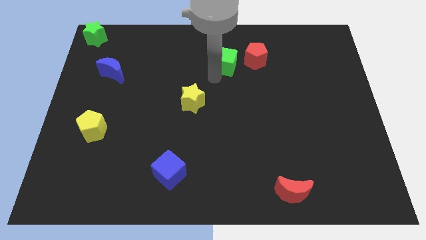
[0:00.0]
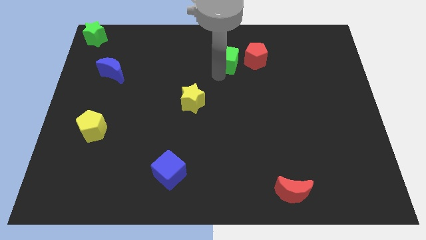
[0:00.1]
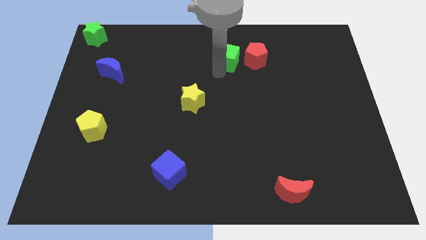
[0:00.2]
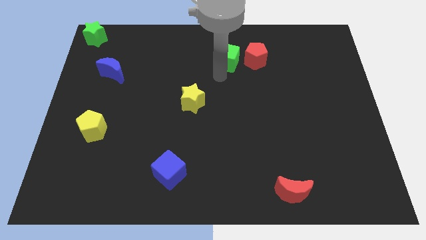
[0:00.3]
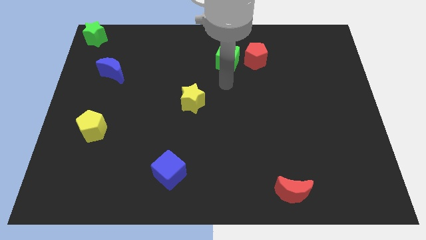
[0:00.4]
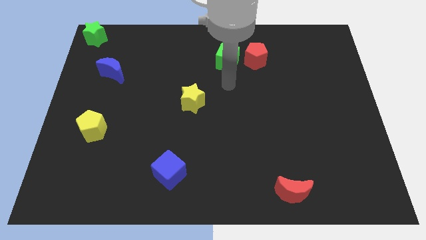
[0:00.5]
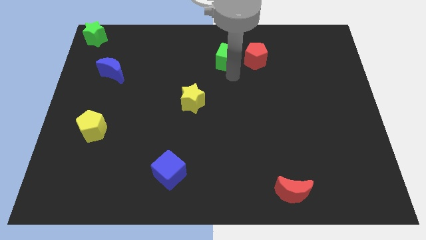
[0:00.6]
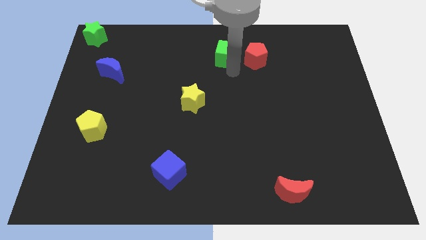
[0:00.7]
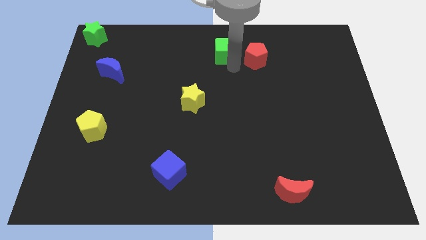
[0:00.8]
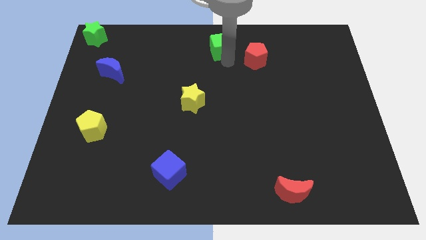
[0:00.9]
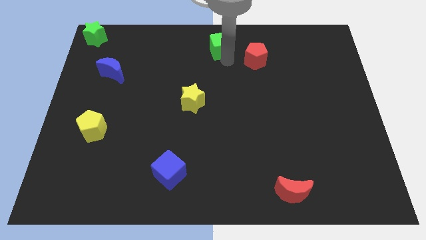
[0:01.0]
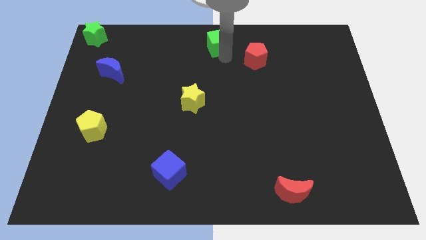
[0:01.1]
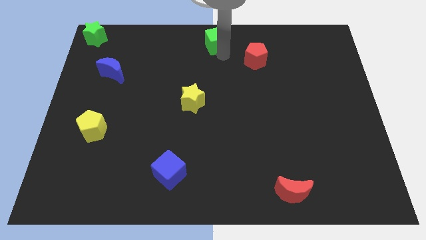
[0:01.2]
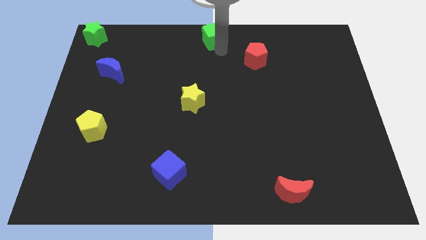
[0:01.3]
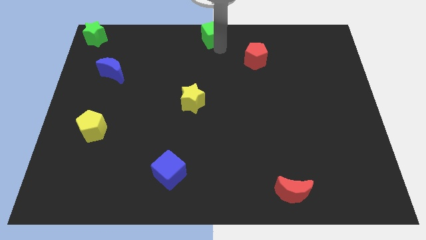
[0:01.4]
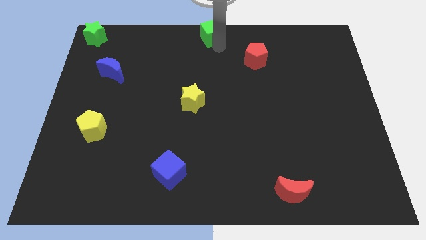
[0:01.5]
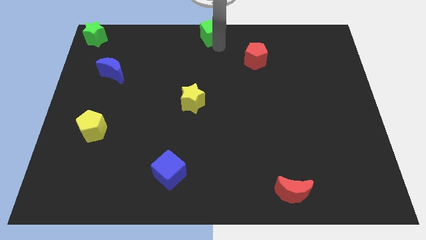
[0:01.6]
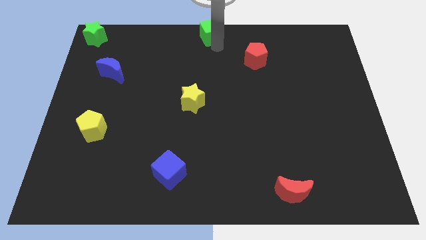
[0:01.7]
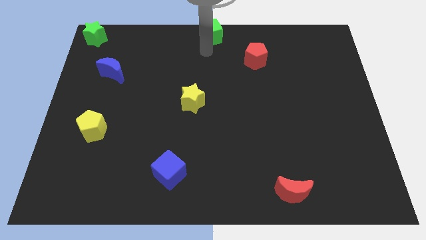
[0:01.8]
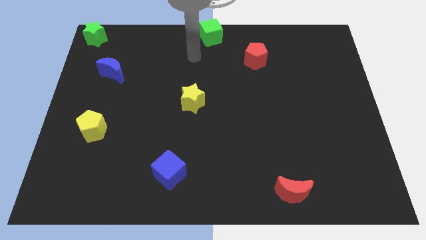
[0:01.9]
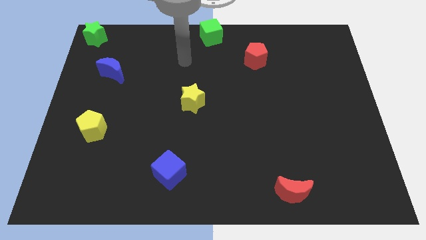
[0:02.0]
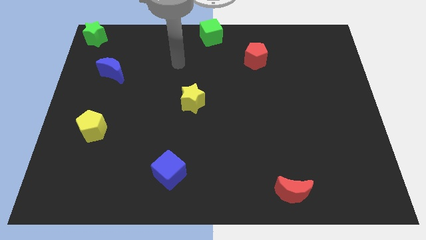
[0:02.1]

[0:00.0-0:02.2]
push green cube to the top center

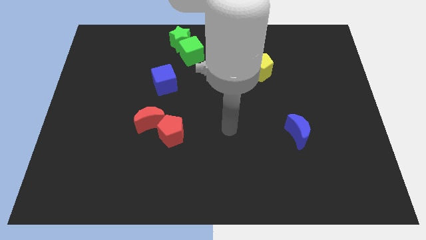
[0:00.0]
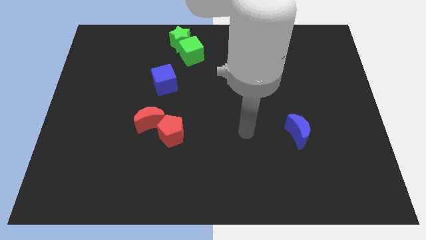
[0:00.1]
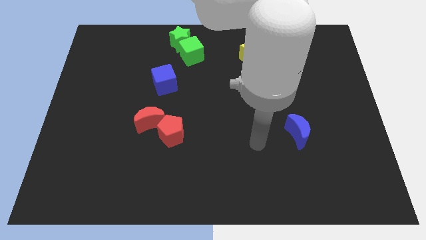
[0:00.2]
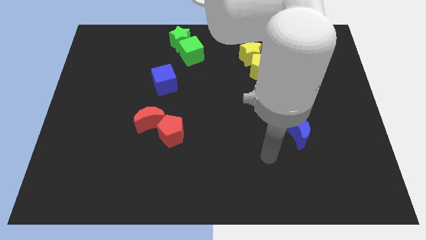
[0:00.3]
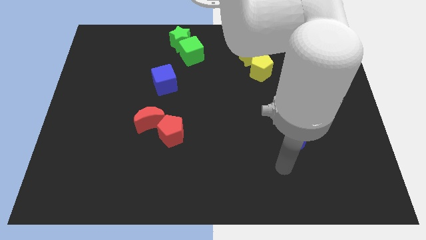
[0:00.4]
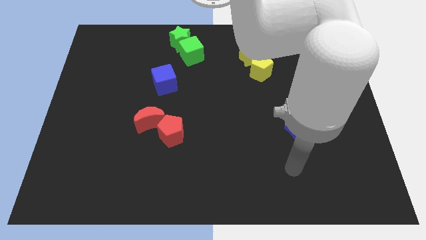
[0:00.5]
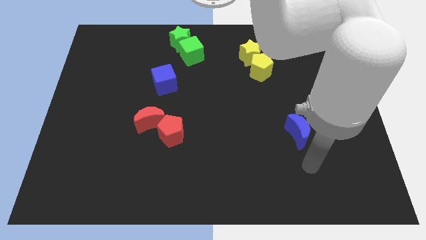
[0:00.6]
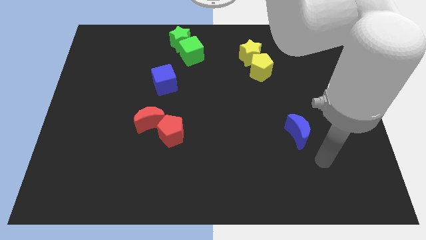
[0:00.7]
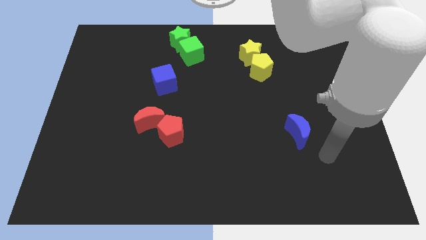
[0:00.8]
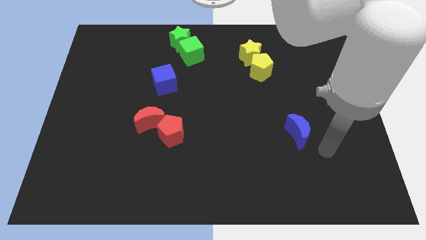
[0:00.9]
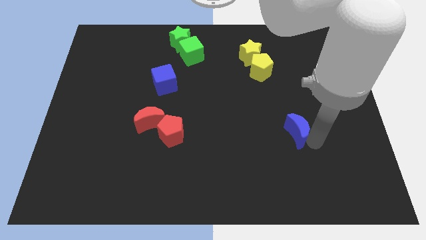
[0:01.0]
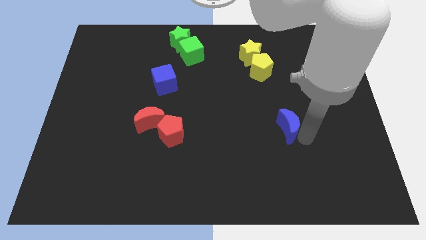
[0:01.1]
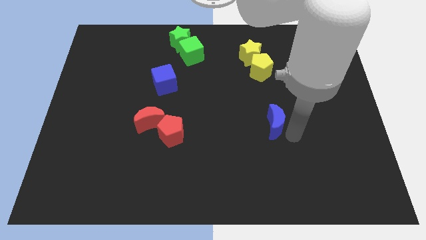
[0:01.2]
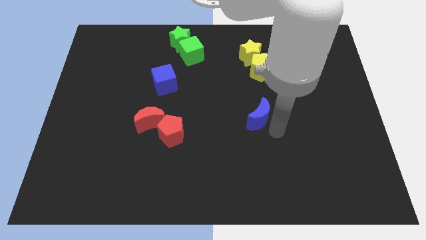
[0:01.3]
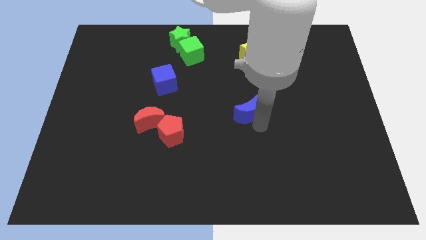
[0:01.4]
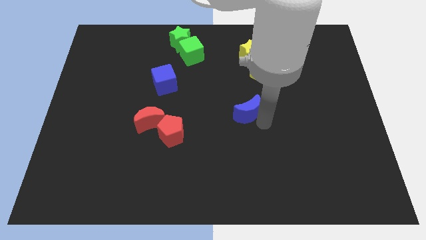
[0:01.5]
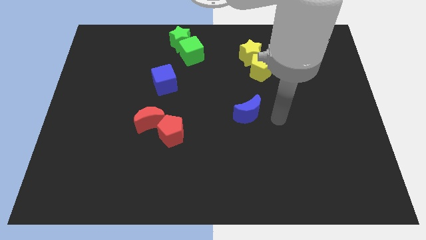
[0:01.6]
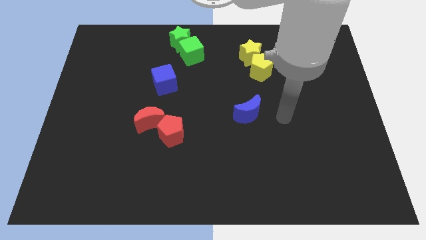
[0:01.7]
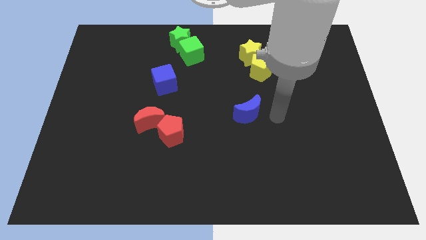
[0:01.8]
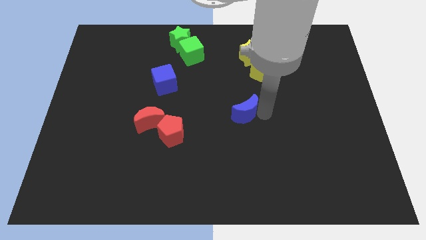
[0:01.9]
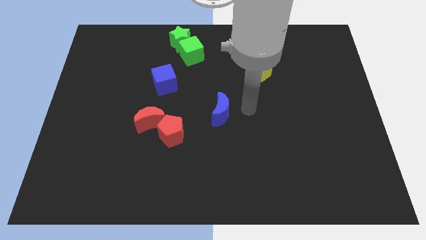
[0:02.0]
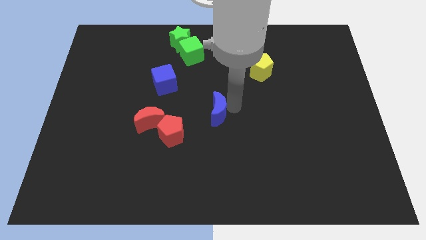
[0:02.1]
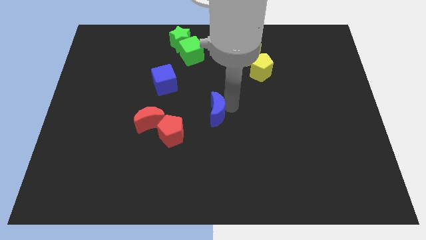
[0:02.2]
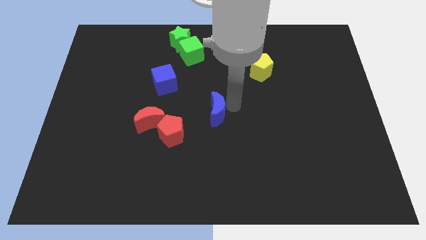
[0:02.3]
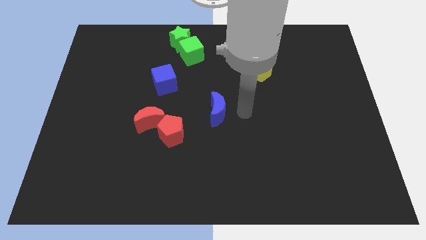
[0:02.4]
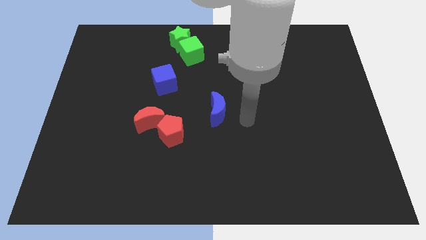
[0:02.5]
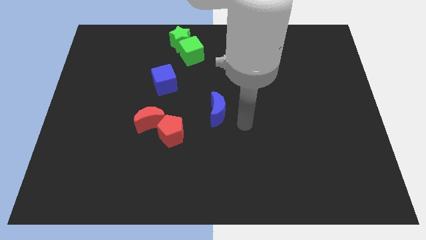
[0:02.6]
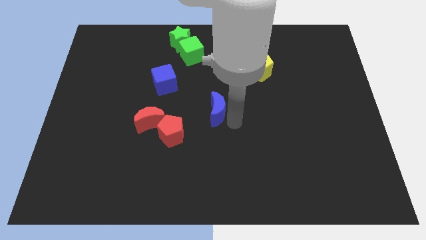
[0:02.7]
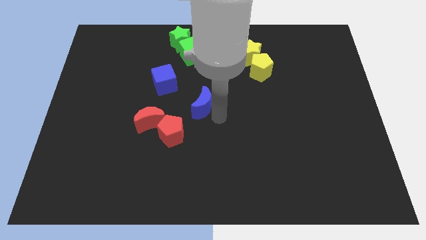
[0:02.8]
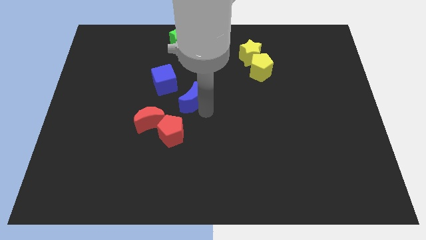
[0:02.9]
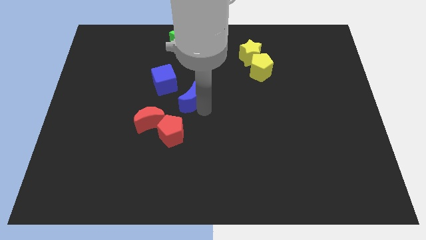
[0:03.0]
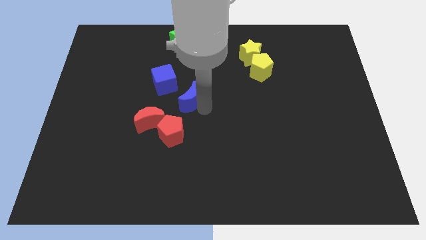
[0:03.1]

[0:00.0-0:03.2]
move the blue crescent at the bottom of the green cube diagonally

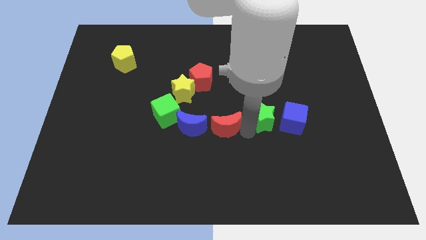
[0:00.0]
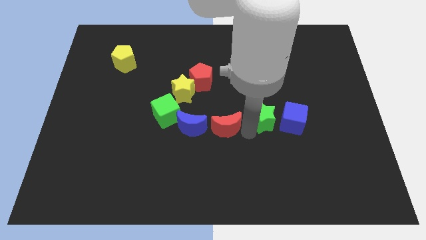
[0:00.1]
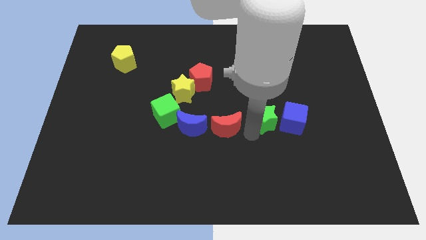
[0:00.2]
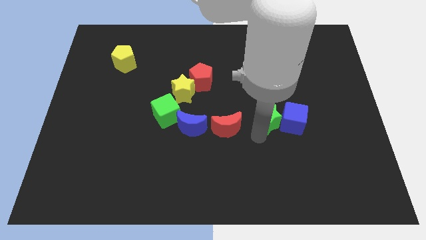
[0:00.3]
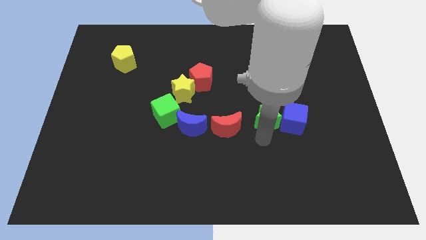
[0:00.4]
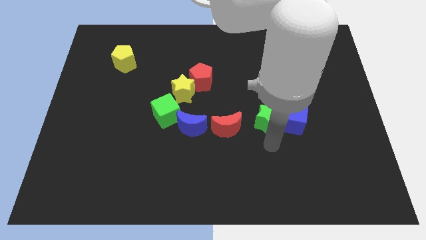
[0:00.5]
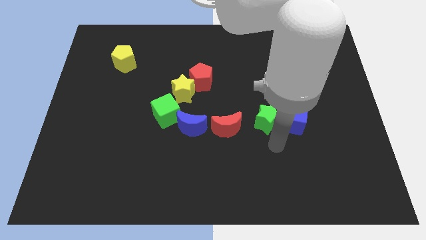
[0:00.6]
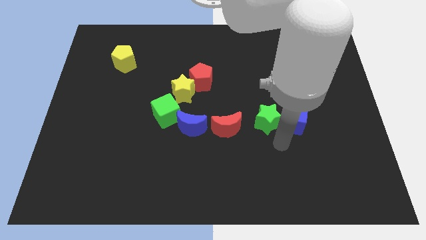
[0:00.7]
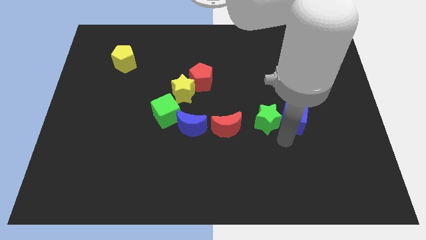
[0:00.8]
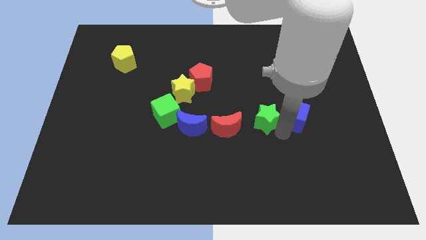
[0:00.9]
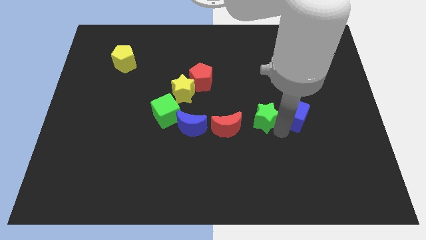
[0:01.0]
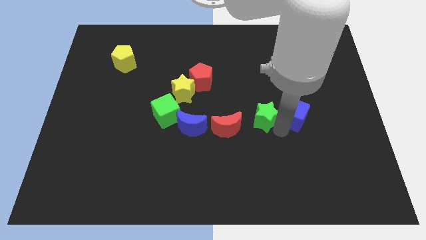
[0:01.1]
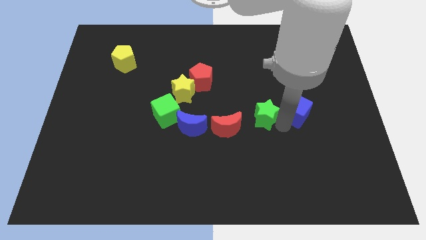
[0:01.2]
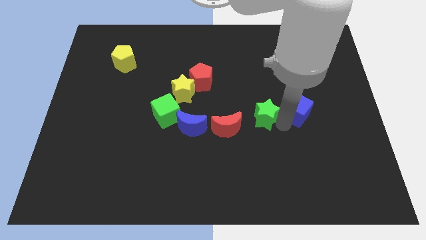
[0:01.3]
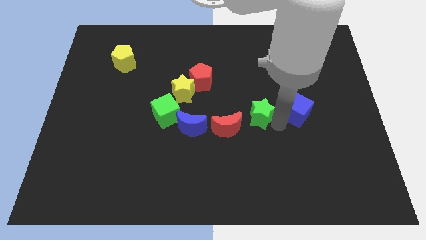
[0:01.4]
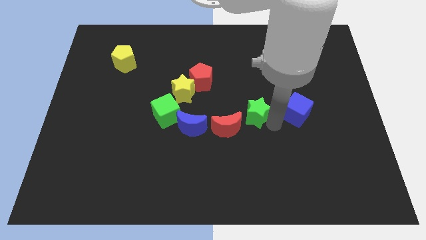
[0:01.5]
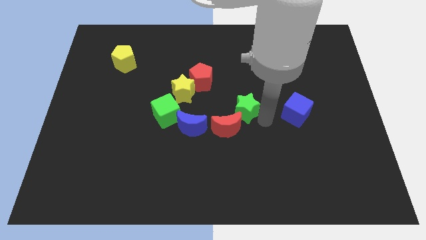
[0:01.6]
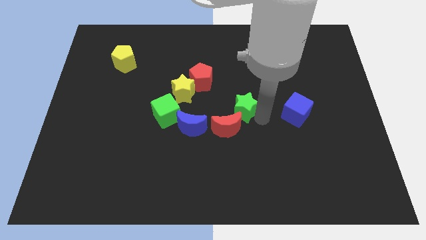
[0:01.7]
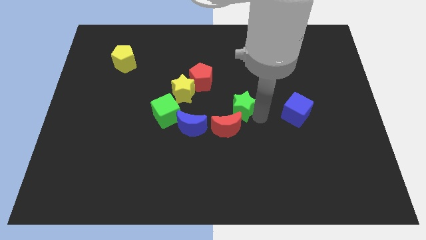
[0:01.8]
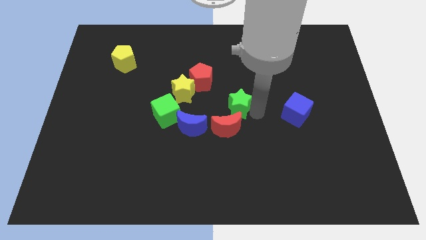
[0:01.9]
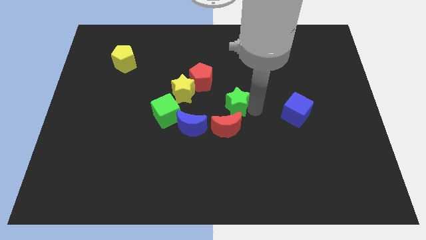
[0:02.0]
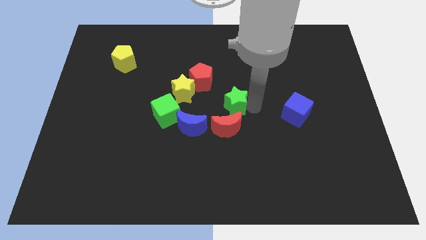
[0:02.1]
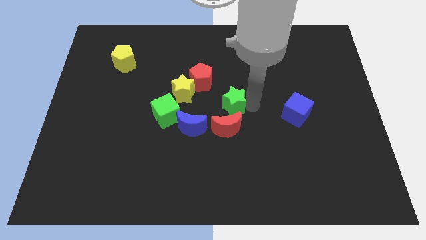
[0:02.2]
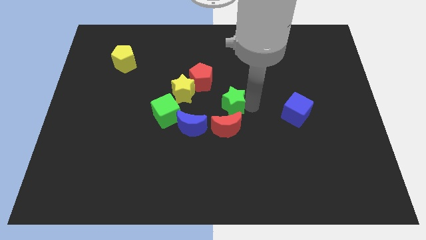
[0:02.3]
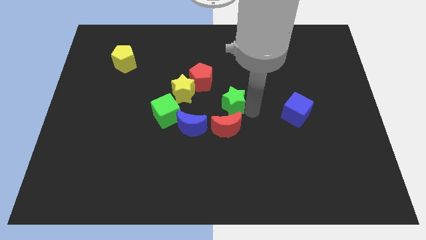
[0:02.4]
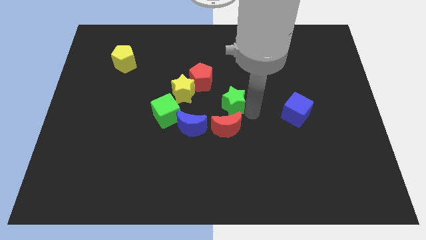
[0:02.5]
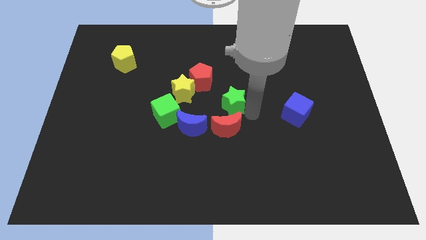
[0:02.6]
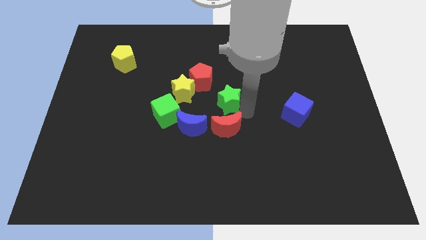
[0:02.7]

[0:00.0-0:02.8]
separate the green star from blue cube

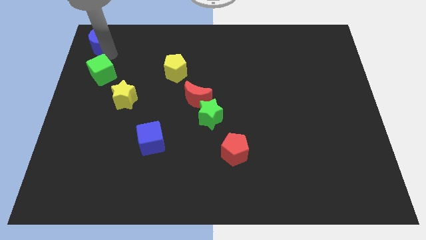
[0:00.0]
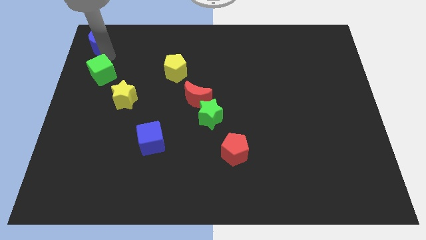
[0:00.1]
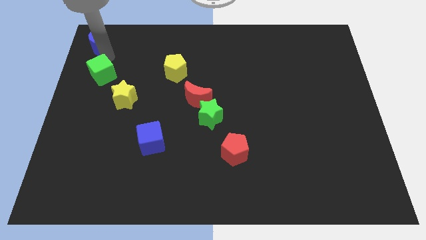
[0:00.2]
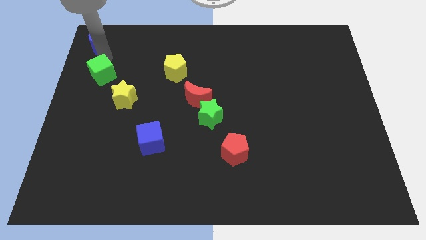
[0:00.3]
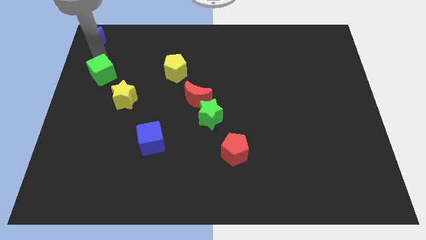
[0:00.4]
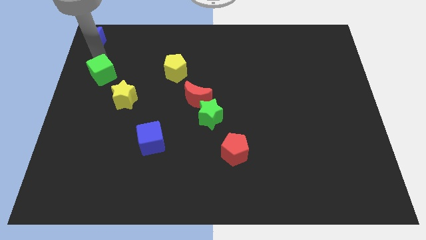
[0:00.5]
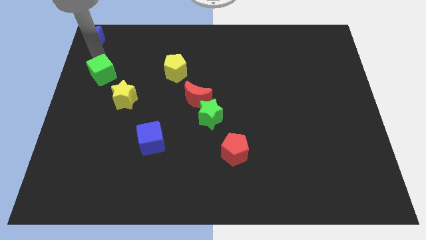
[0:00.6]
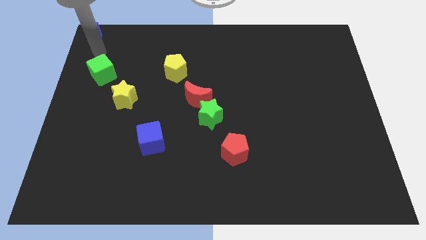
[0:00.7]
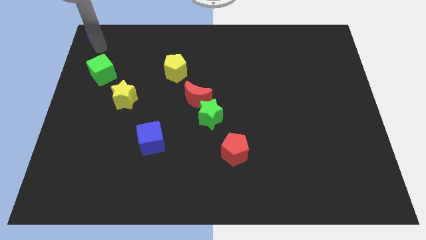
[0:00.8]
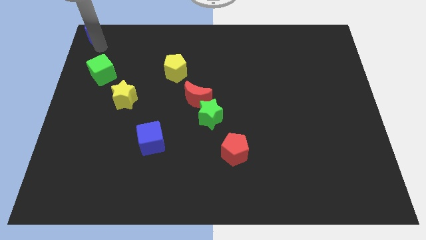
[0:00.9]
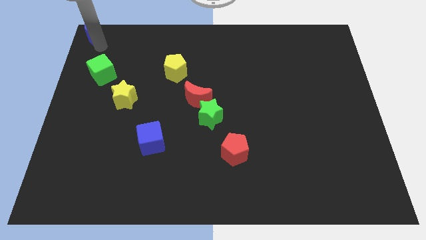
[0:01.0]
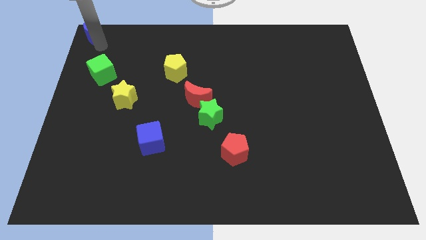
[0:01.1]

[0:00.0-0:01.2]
move the blue crescent to the top left of the board
